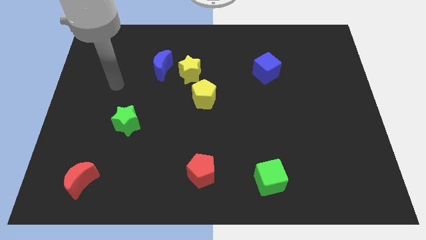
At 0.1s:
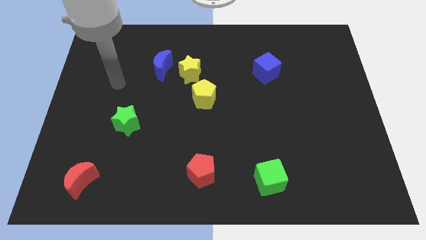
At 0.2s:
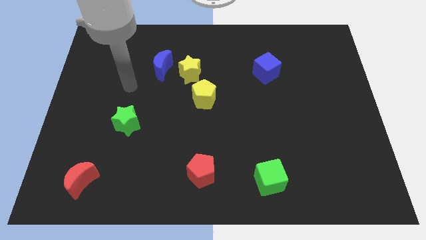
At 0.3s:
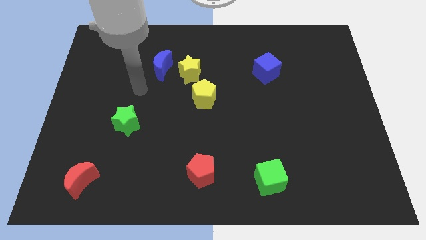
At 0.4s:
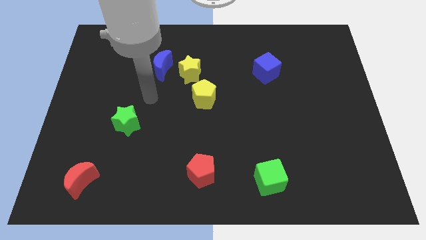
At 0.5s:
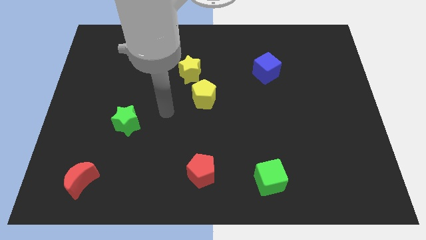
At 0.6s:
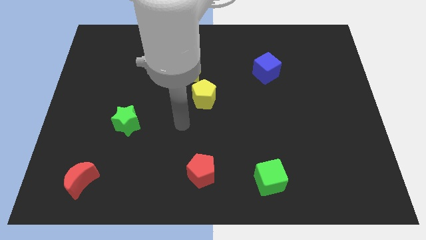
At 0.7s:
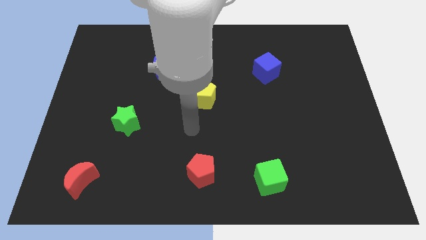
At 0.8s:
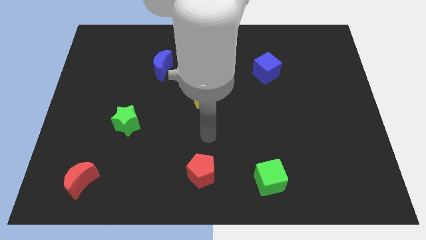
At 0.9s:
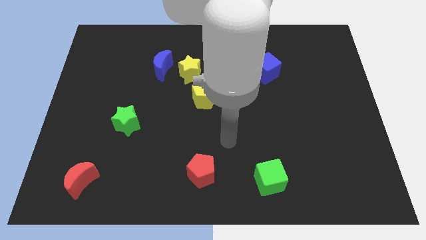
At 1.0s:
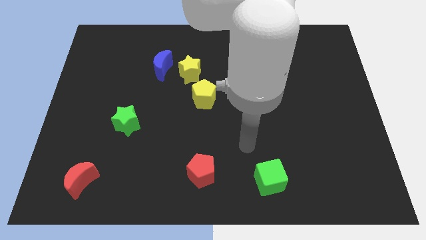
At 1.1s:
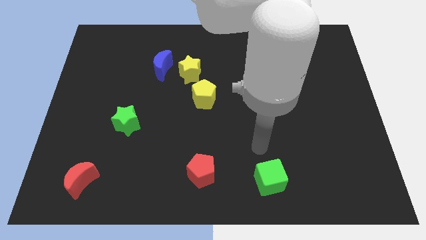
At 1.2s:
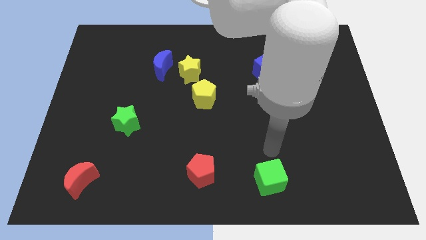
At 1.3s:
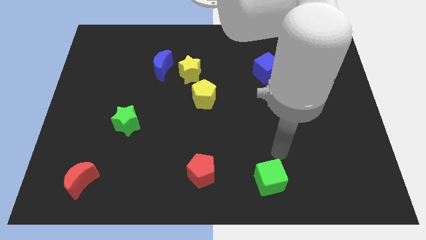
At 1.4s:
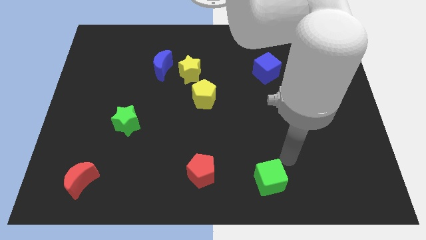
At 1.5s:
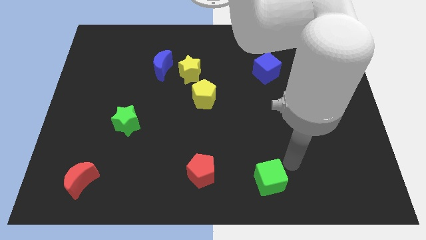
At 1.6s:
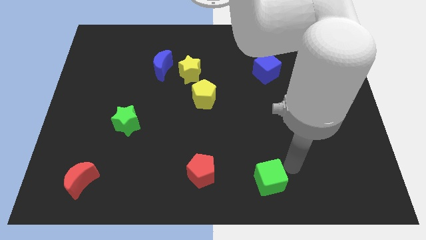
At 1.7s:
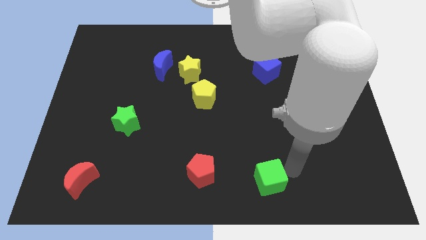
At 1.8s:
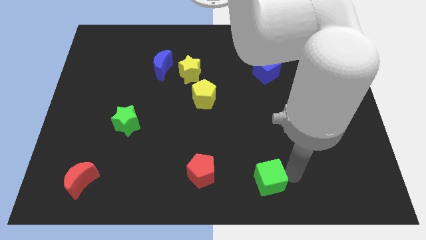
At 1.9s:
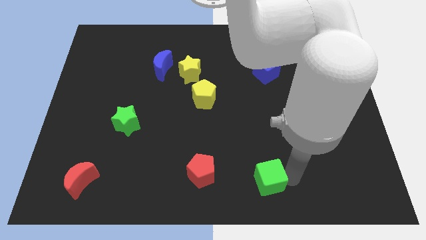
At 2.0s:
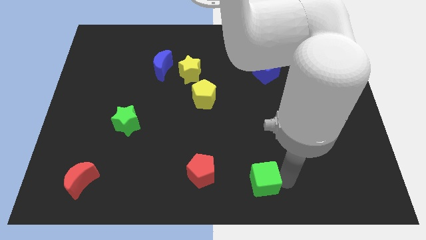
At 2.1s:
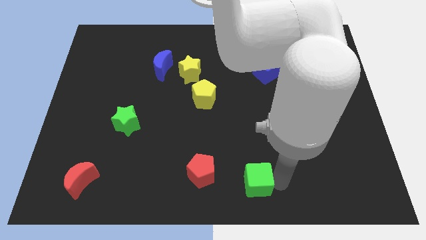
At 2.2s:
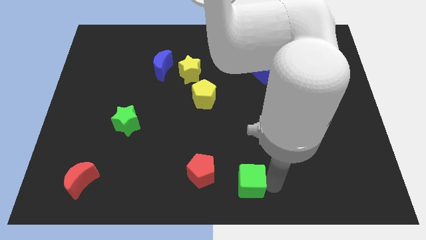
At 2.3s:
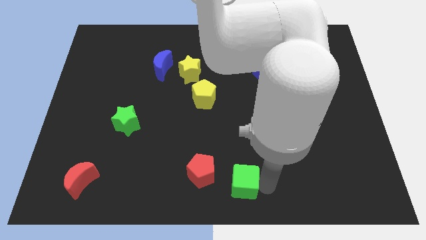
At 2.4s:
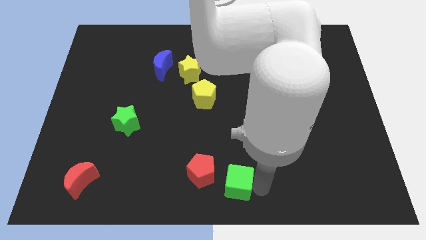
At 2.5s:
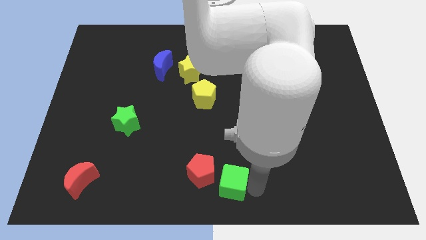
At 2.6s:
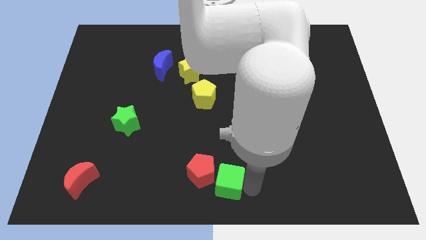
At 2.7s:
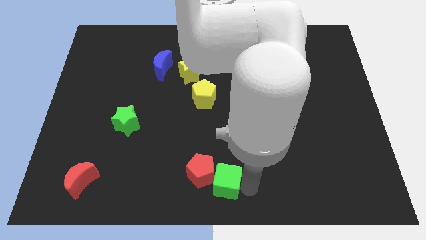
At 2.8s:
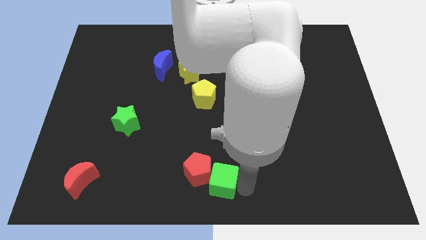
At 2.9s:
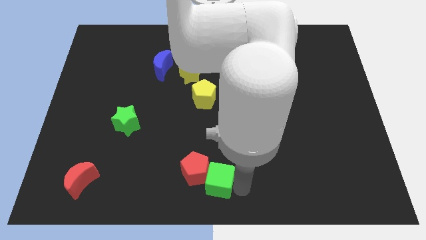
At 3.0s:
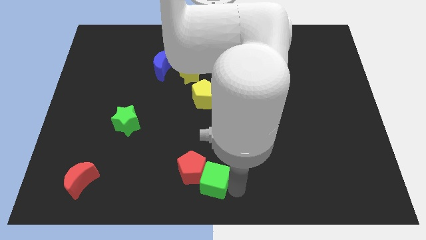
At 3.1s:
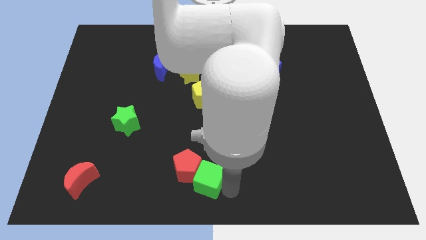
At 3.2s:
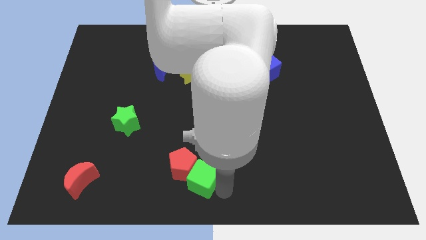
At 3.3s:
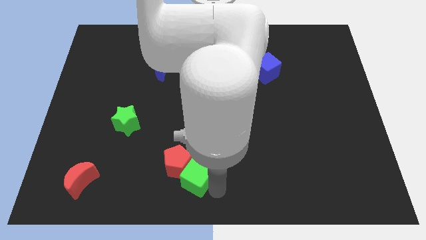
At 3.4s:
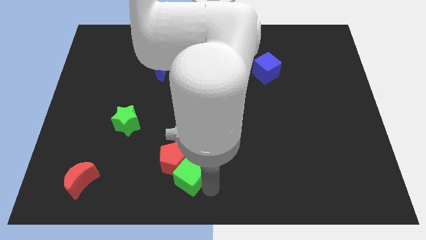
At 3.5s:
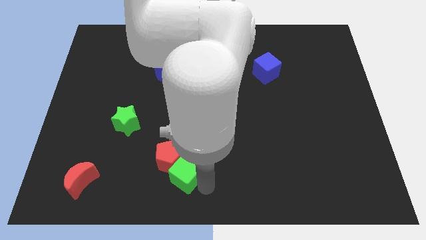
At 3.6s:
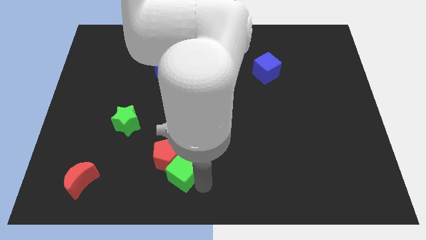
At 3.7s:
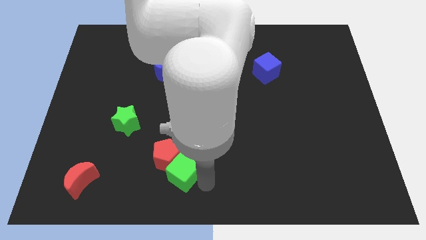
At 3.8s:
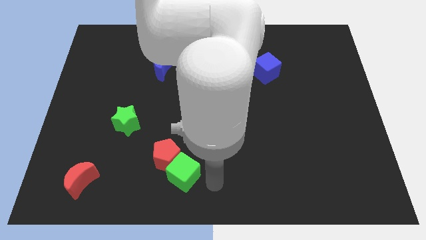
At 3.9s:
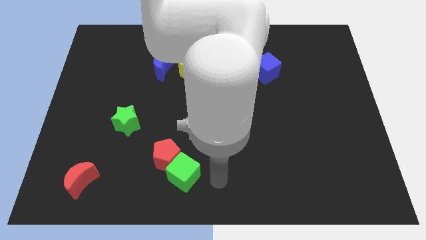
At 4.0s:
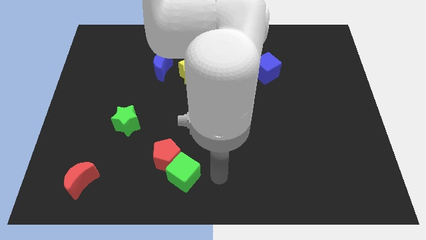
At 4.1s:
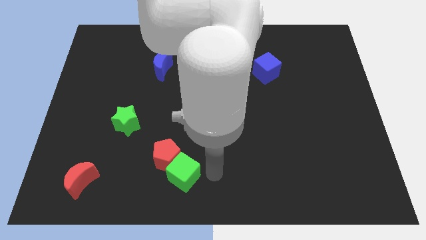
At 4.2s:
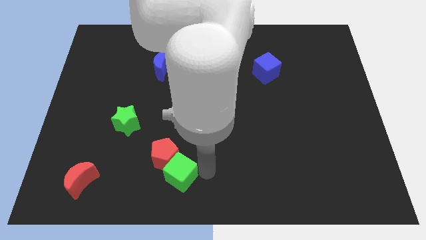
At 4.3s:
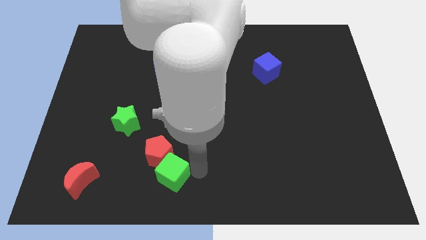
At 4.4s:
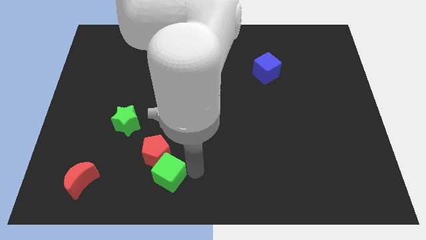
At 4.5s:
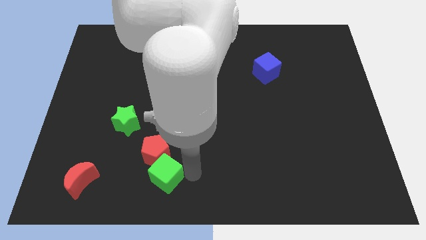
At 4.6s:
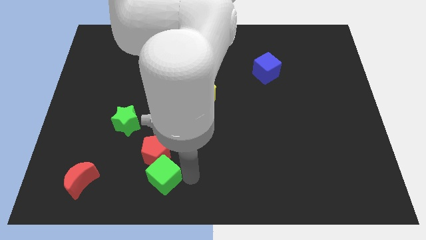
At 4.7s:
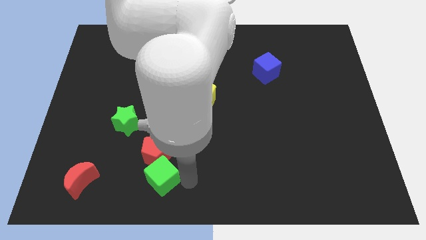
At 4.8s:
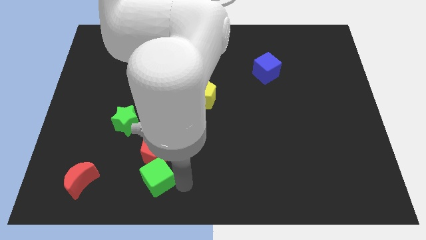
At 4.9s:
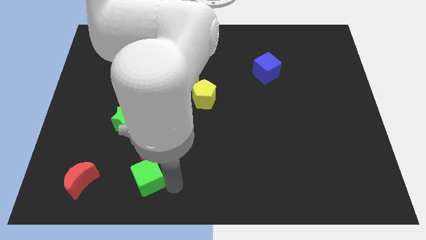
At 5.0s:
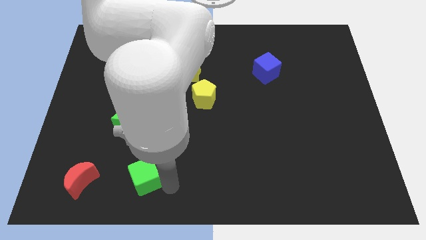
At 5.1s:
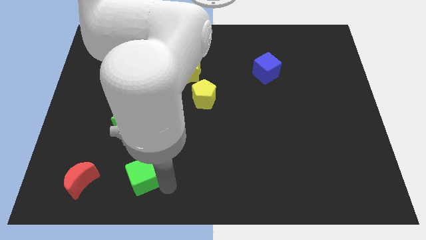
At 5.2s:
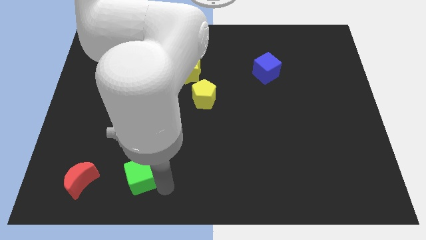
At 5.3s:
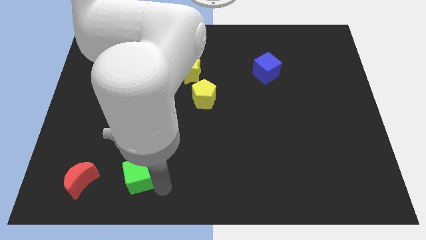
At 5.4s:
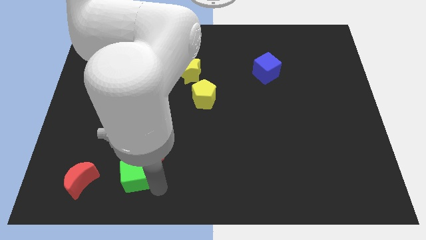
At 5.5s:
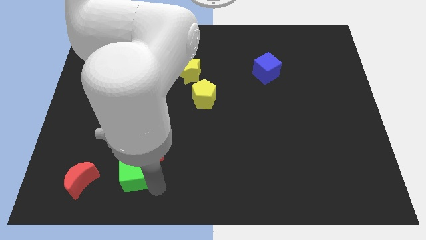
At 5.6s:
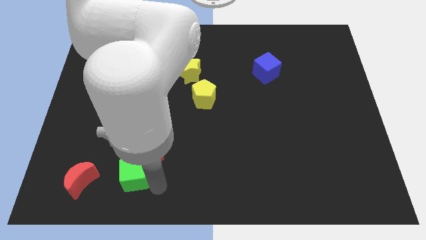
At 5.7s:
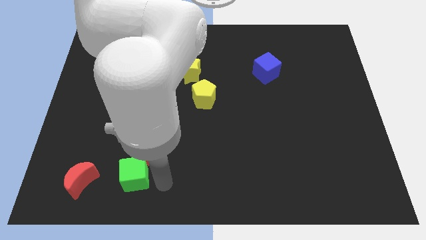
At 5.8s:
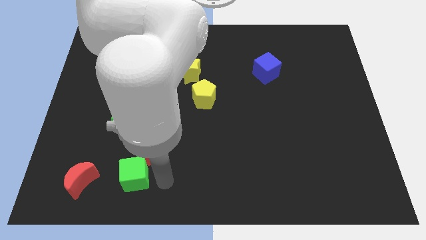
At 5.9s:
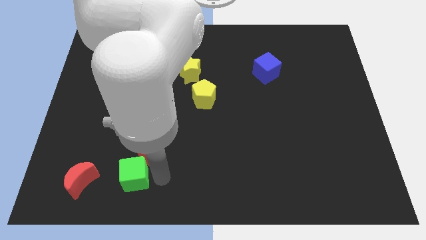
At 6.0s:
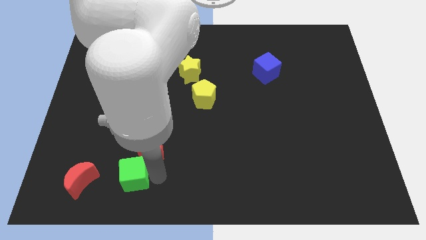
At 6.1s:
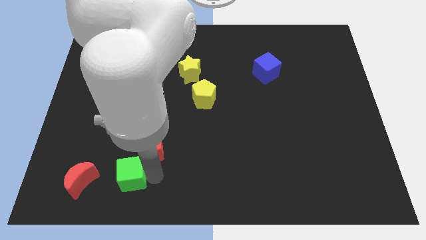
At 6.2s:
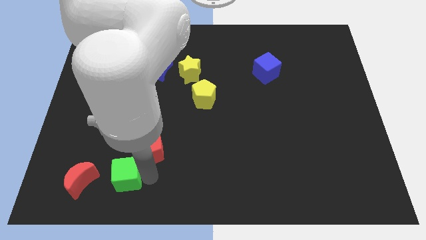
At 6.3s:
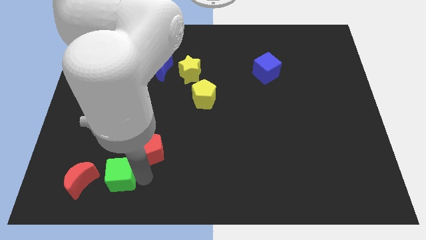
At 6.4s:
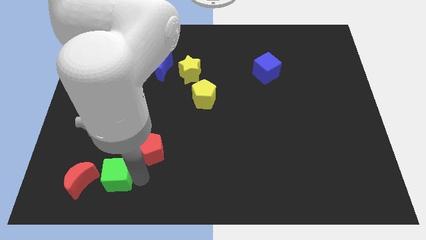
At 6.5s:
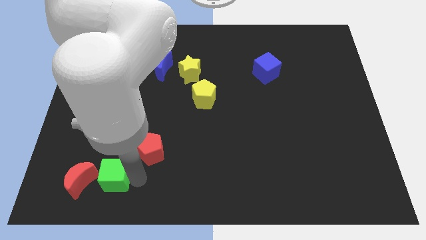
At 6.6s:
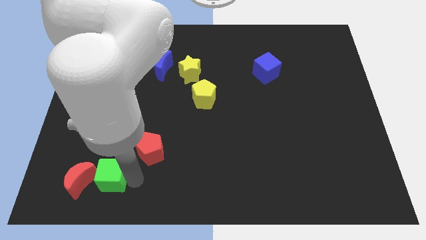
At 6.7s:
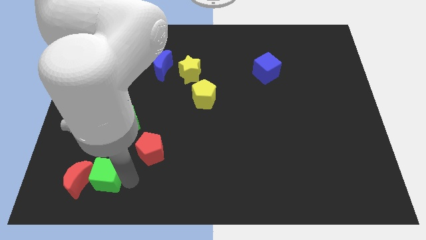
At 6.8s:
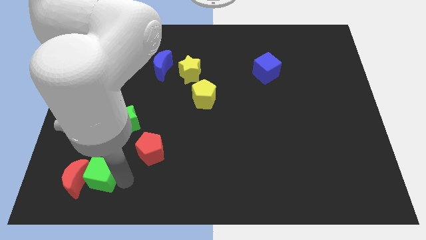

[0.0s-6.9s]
push the green cube close to the red moon

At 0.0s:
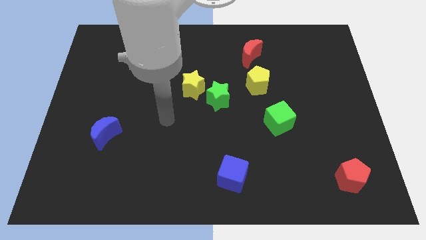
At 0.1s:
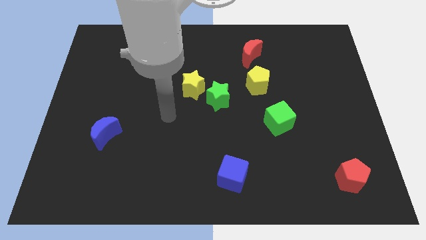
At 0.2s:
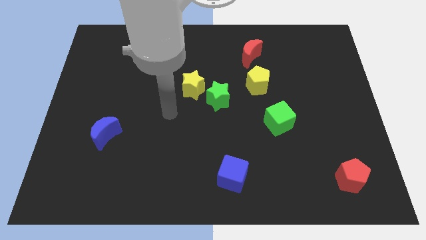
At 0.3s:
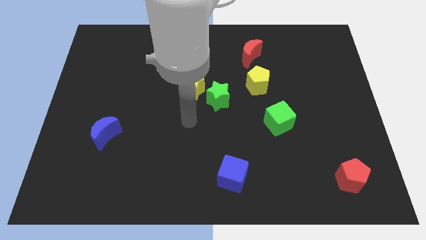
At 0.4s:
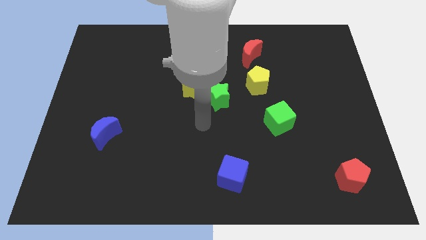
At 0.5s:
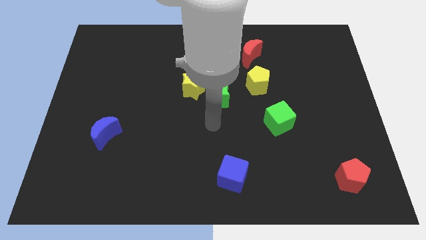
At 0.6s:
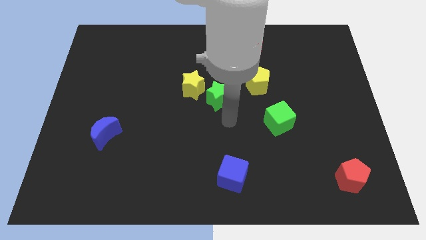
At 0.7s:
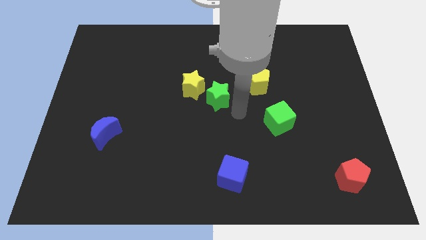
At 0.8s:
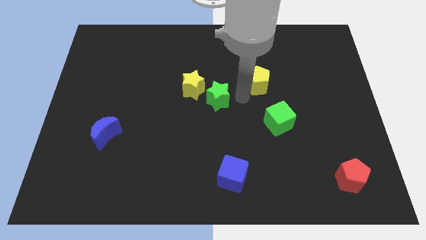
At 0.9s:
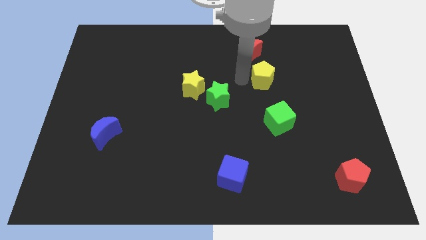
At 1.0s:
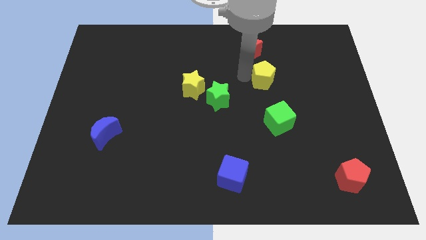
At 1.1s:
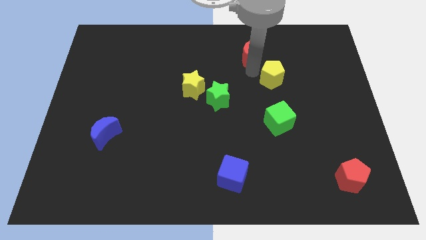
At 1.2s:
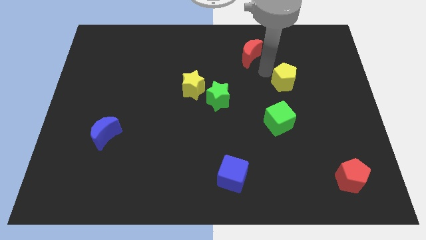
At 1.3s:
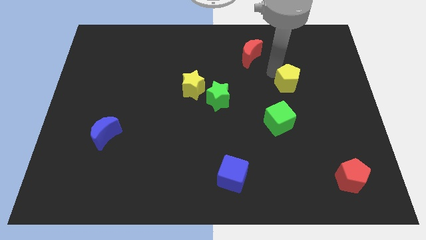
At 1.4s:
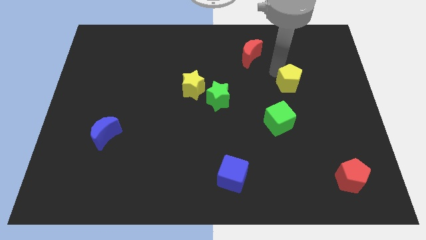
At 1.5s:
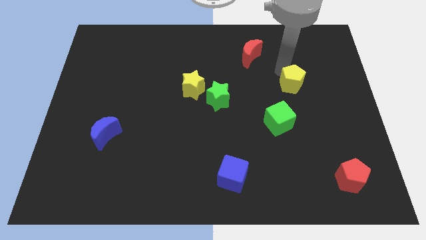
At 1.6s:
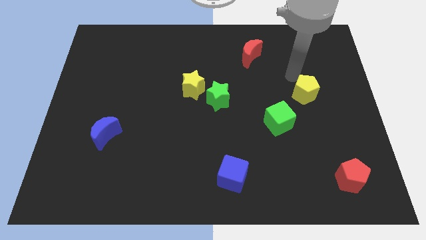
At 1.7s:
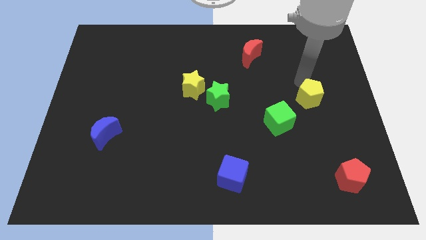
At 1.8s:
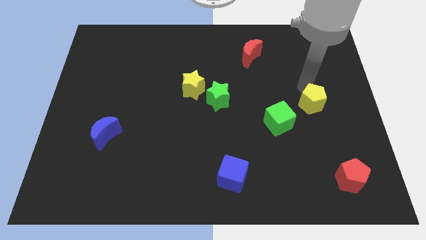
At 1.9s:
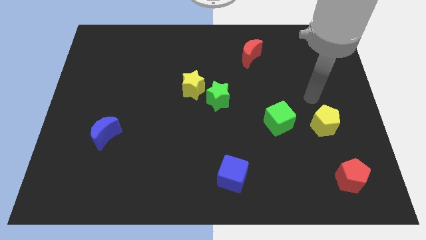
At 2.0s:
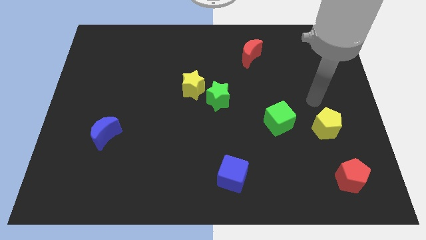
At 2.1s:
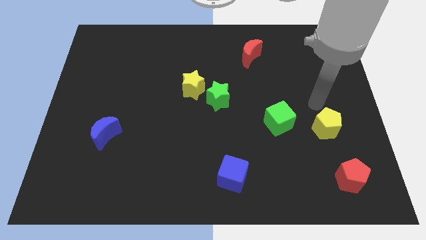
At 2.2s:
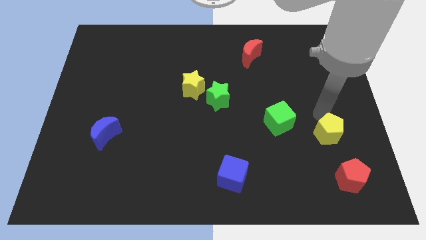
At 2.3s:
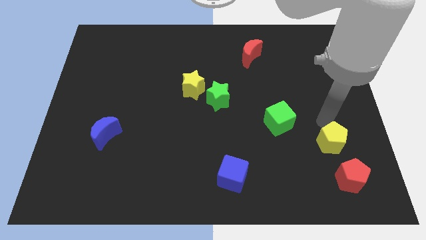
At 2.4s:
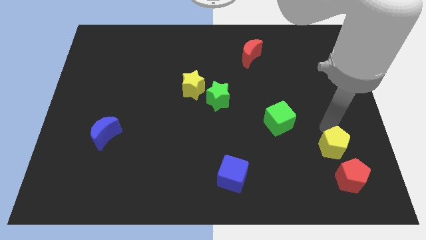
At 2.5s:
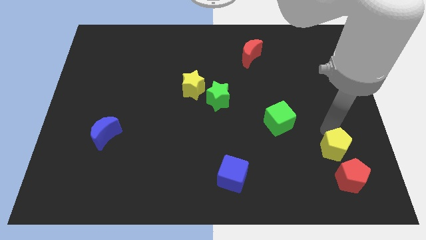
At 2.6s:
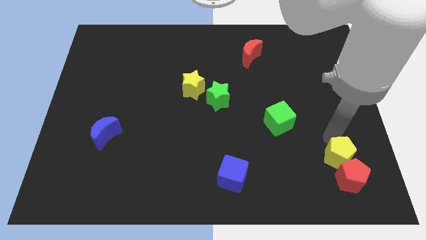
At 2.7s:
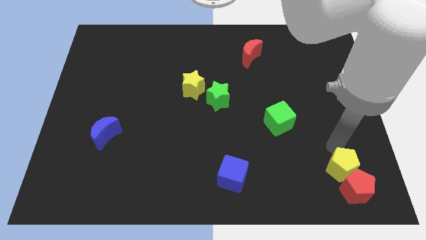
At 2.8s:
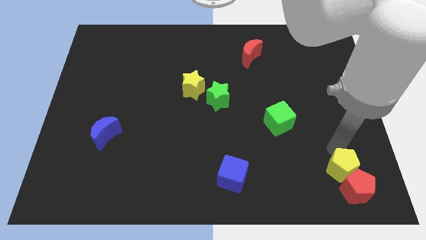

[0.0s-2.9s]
put the yellow pentagon next to the red pentagon
